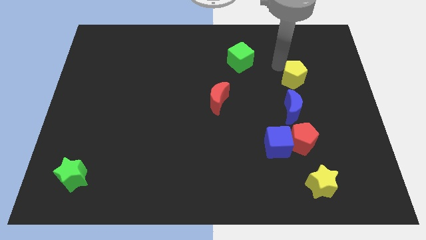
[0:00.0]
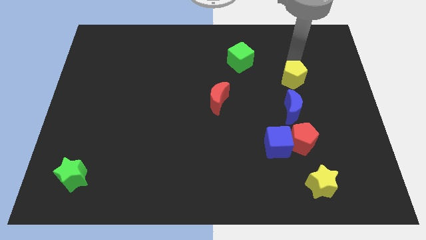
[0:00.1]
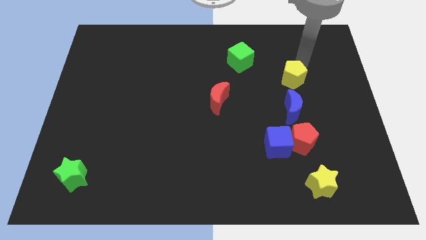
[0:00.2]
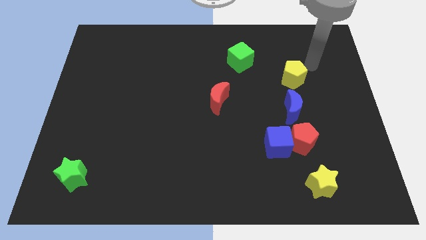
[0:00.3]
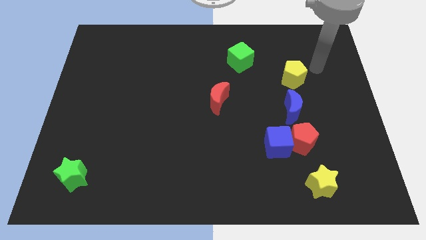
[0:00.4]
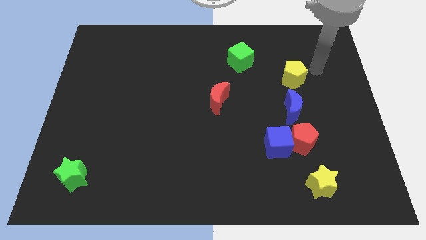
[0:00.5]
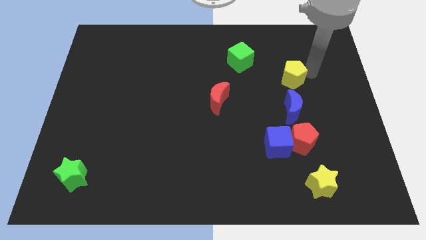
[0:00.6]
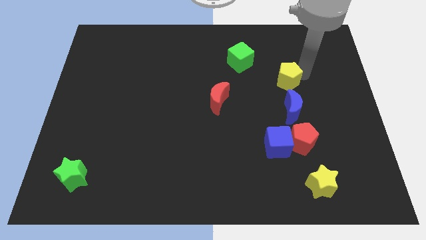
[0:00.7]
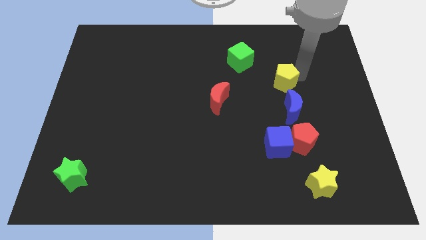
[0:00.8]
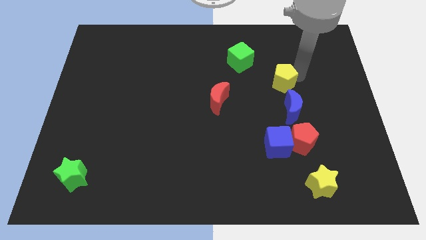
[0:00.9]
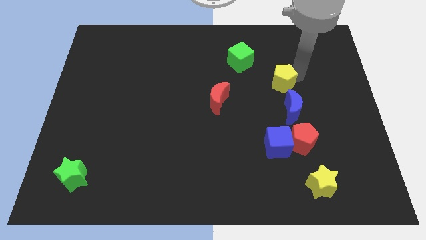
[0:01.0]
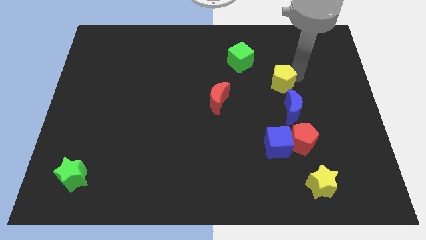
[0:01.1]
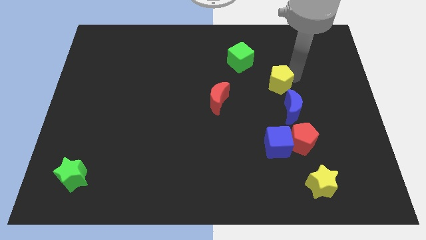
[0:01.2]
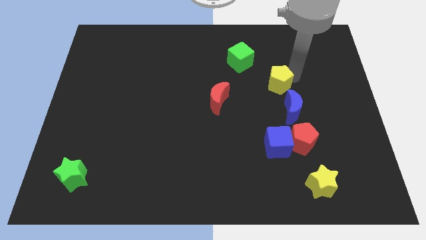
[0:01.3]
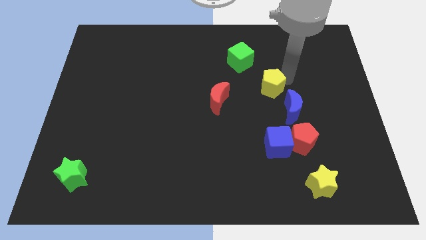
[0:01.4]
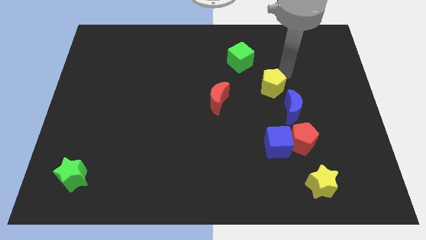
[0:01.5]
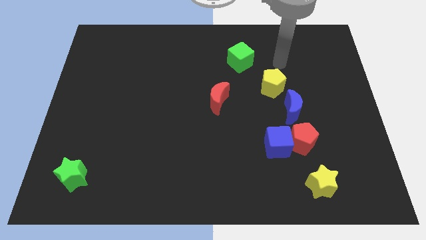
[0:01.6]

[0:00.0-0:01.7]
slightly push the yellow pentagon downward

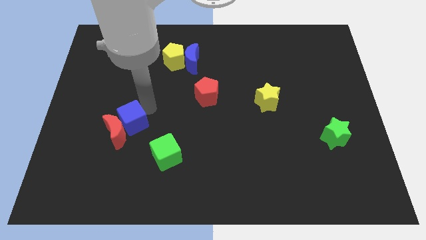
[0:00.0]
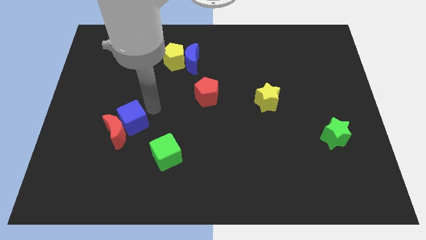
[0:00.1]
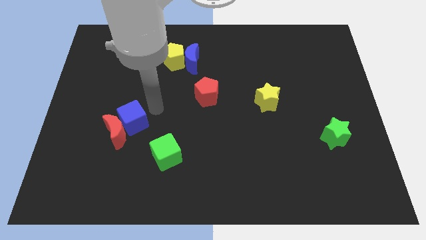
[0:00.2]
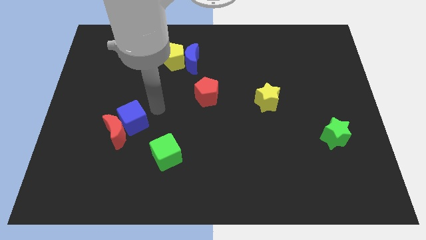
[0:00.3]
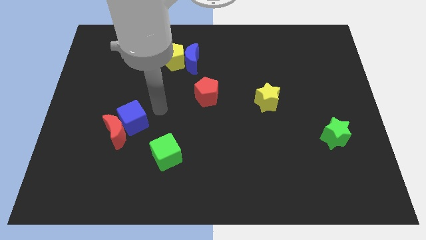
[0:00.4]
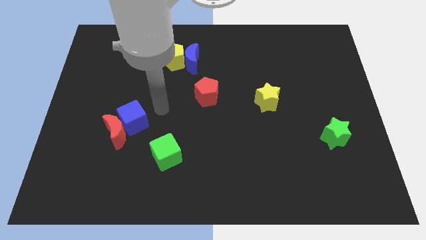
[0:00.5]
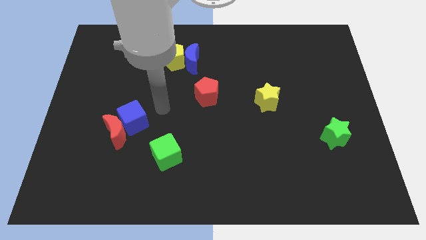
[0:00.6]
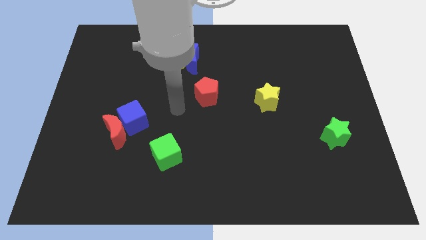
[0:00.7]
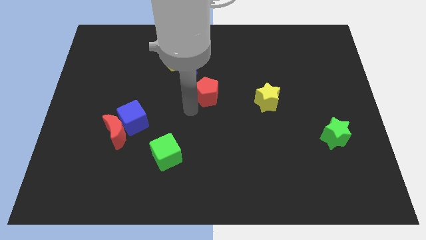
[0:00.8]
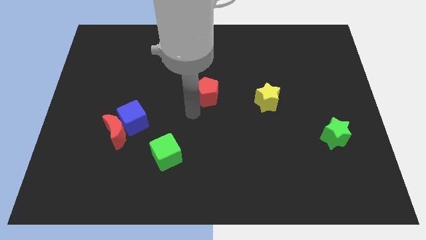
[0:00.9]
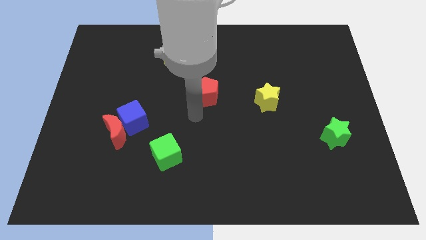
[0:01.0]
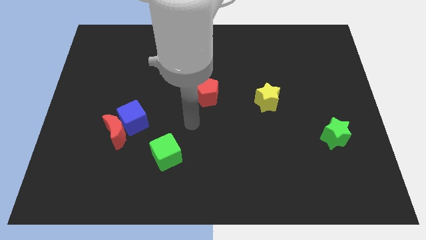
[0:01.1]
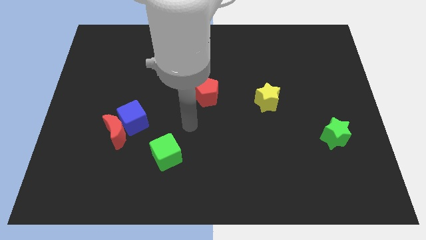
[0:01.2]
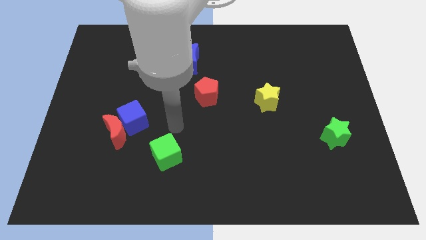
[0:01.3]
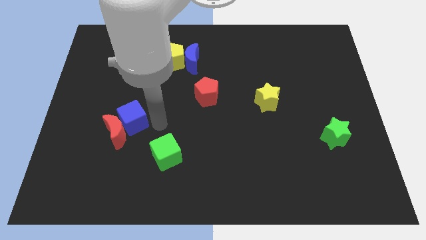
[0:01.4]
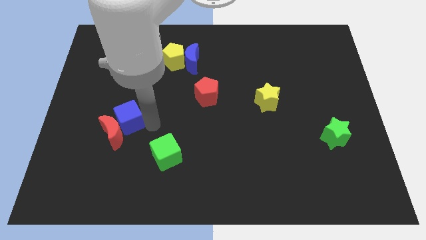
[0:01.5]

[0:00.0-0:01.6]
point your arm at the bottom right side of blue cube

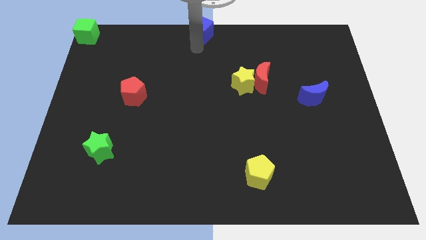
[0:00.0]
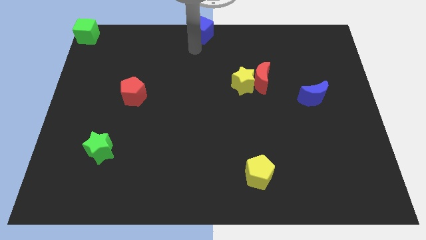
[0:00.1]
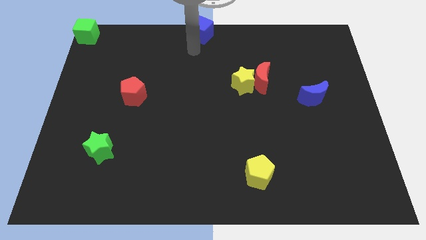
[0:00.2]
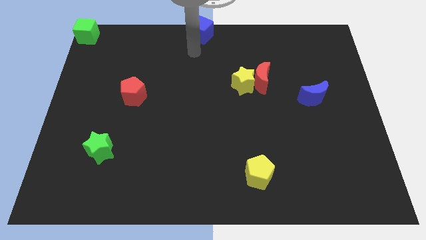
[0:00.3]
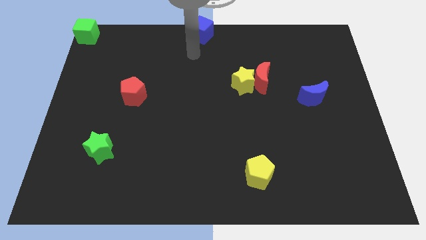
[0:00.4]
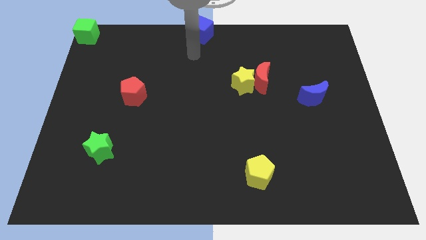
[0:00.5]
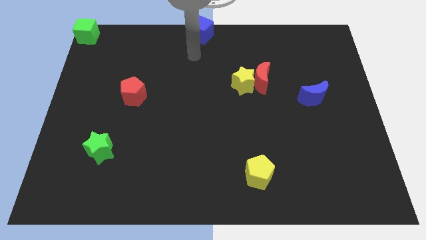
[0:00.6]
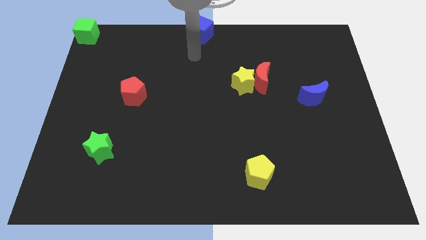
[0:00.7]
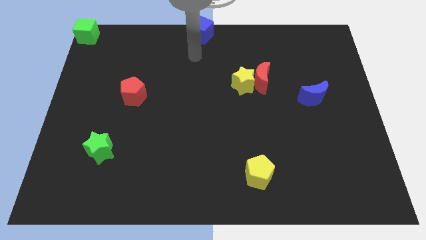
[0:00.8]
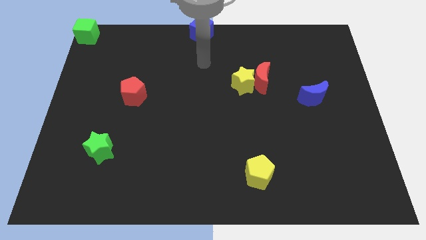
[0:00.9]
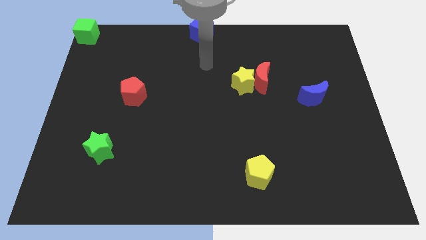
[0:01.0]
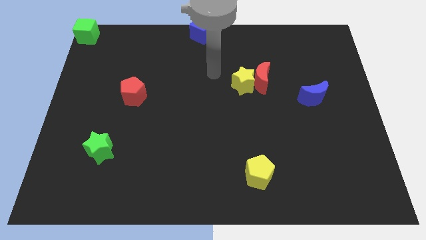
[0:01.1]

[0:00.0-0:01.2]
push blue cube at top center of the board

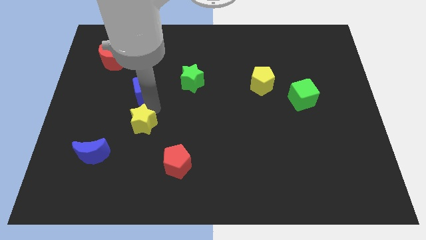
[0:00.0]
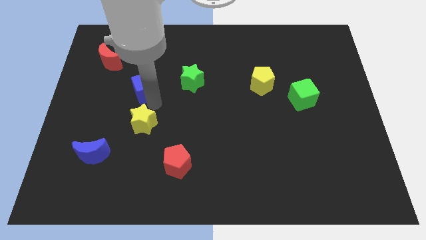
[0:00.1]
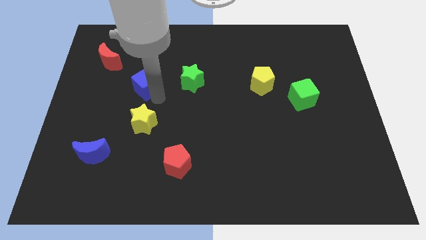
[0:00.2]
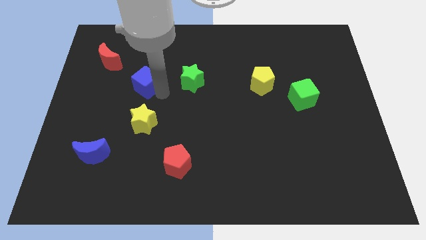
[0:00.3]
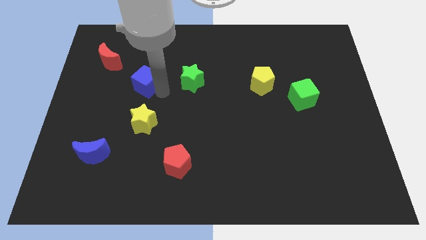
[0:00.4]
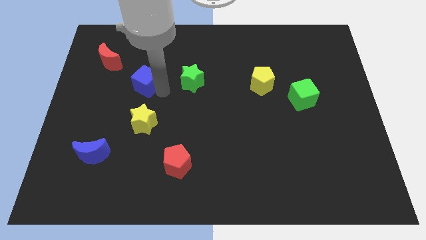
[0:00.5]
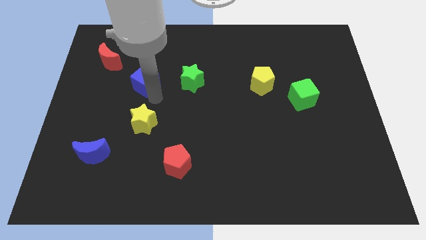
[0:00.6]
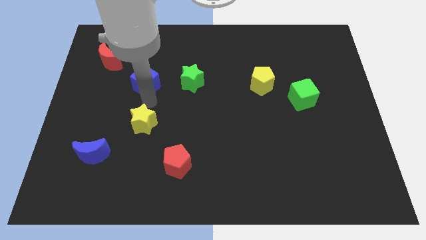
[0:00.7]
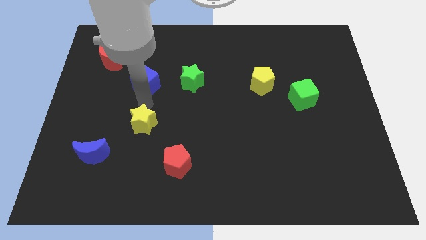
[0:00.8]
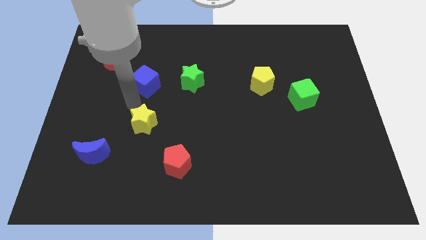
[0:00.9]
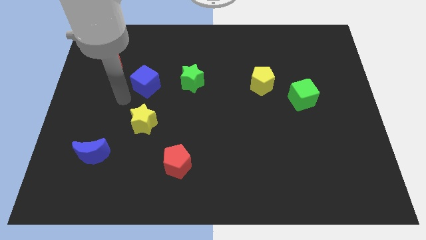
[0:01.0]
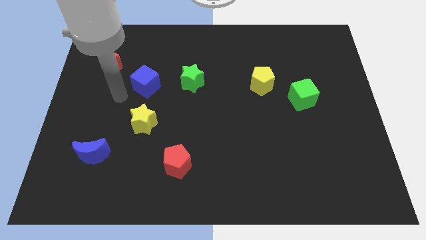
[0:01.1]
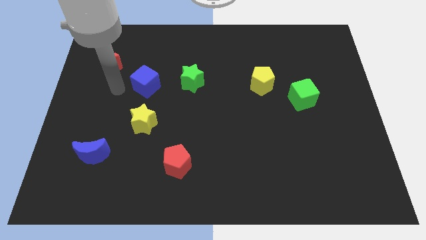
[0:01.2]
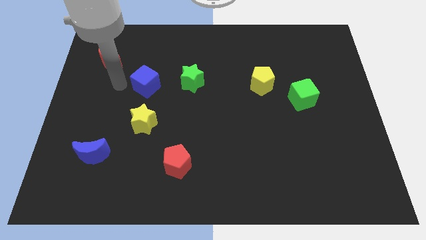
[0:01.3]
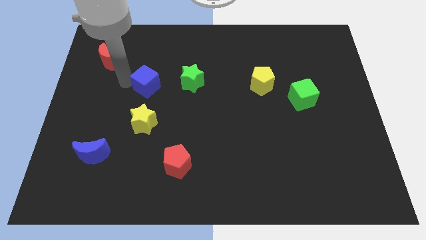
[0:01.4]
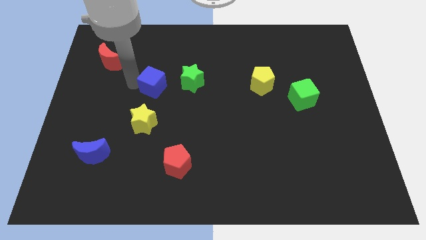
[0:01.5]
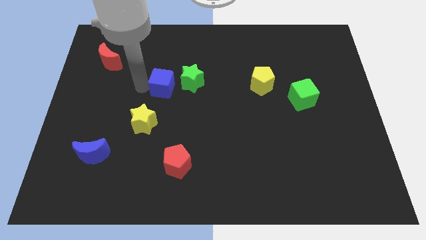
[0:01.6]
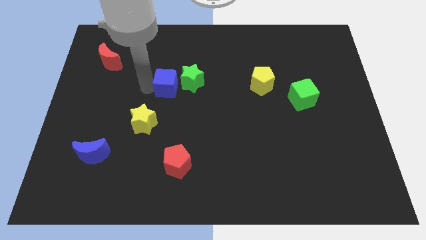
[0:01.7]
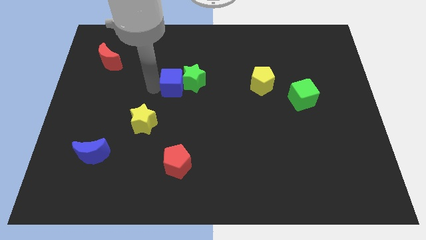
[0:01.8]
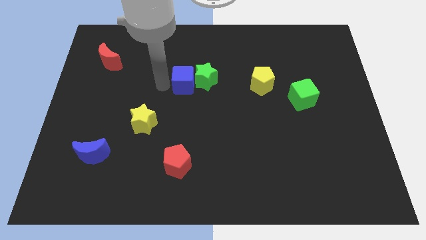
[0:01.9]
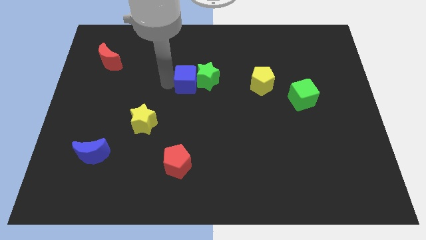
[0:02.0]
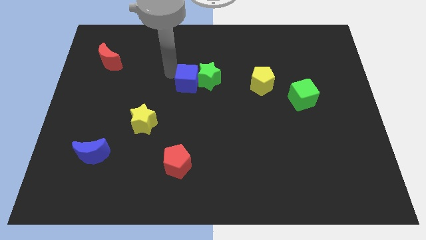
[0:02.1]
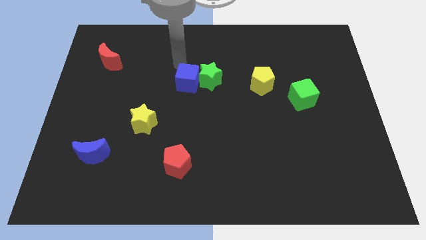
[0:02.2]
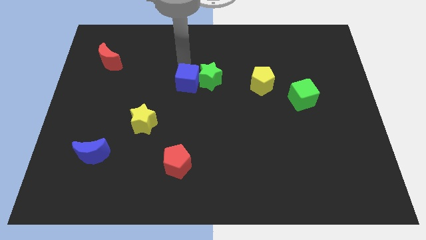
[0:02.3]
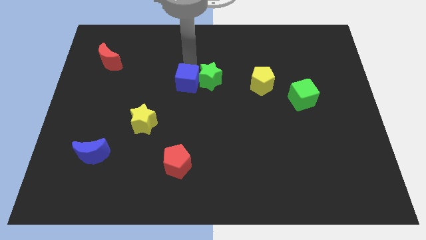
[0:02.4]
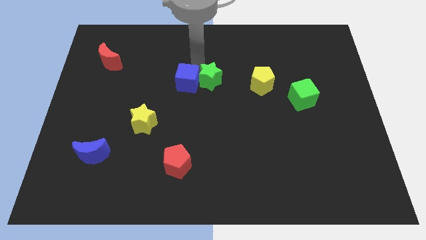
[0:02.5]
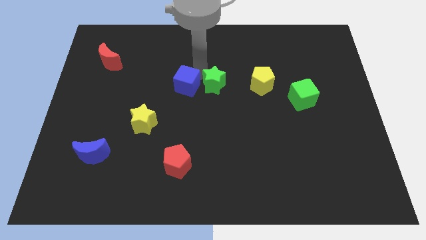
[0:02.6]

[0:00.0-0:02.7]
place the blue cube to the left of green star

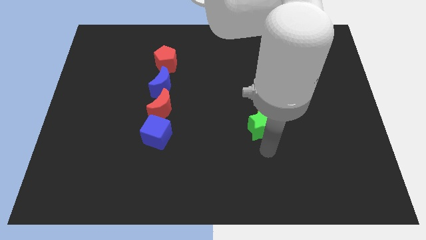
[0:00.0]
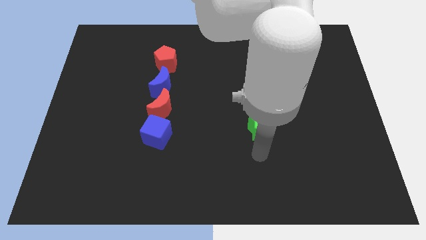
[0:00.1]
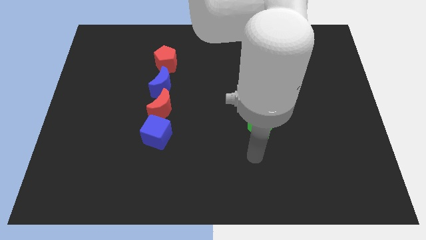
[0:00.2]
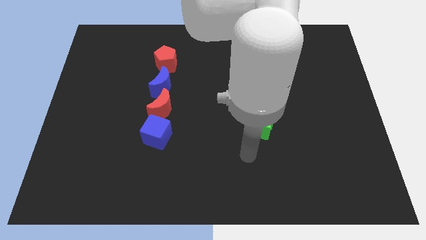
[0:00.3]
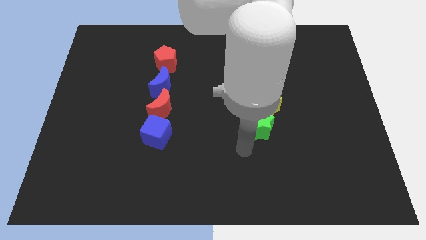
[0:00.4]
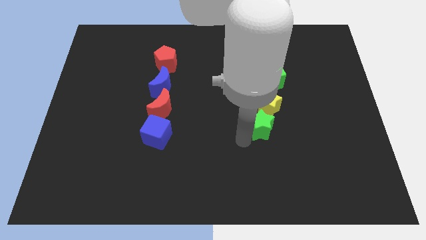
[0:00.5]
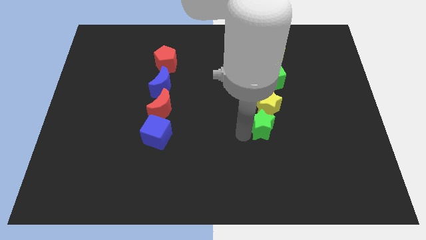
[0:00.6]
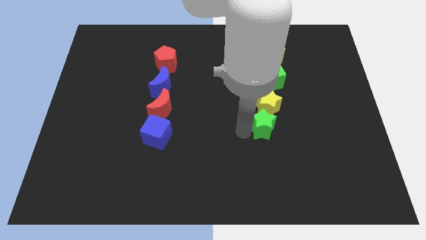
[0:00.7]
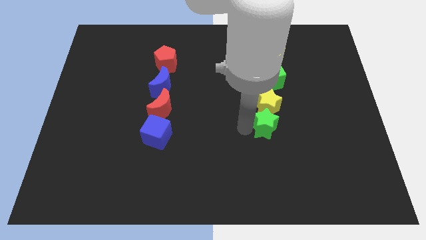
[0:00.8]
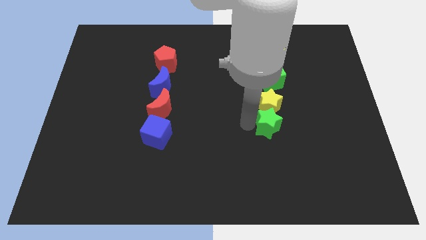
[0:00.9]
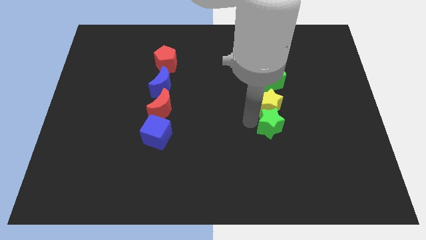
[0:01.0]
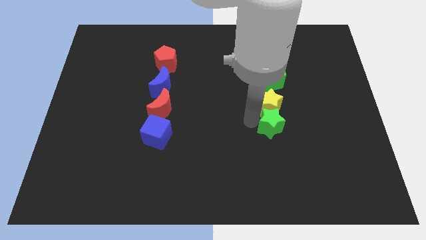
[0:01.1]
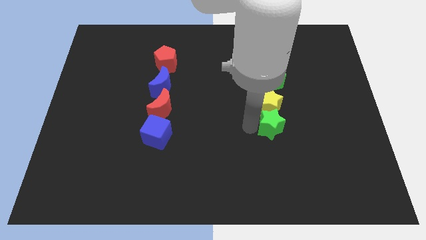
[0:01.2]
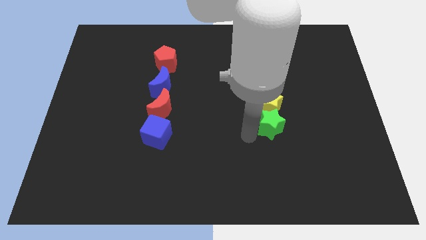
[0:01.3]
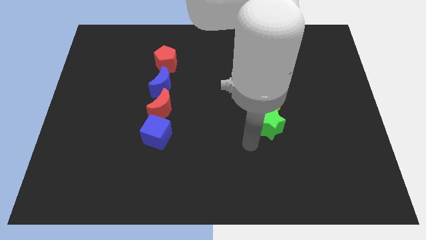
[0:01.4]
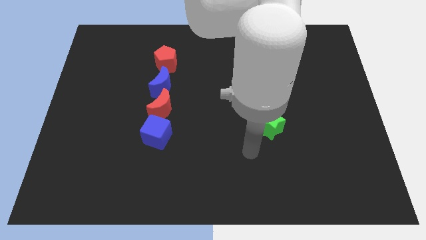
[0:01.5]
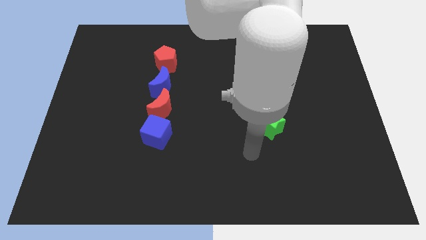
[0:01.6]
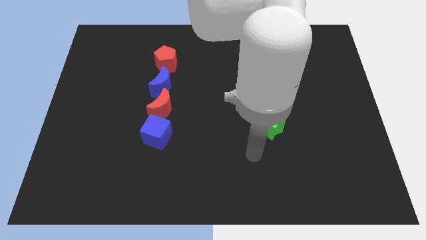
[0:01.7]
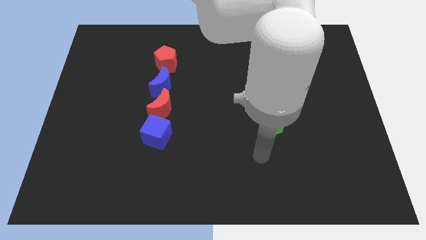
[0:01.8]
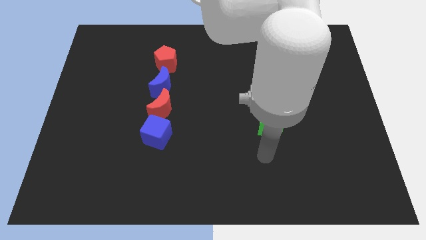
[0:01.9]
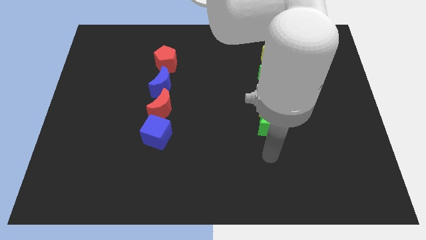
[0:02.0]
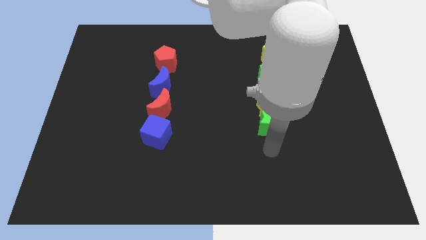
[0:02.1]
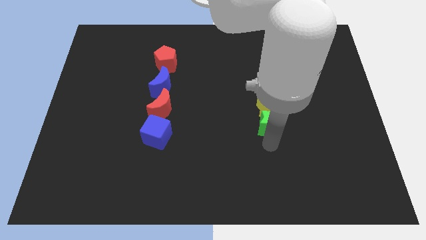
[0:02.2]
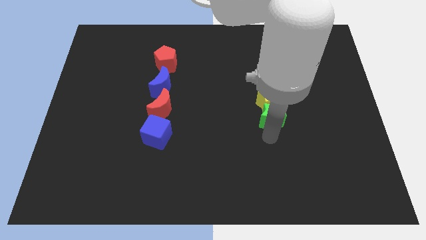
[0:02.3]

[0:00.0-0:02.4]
move the yellow star with the green star towards the green cube
